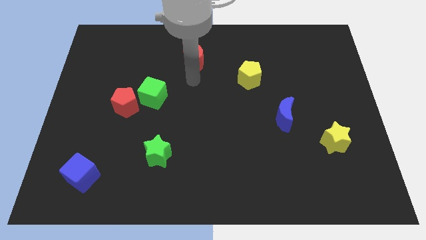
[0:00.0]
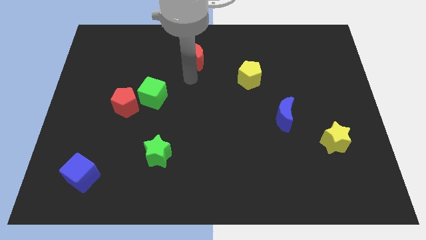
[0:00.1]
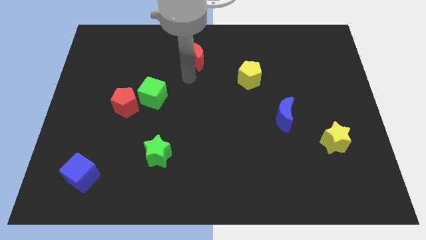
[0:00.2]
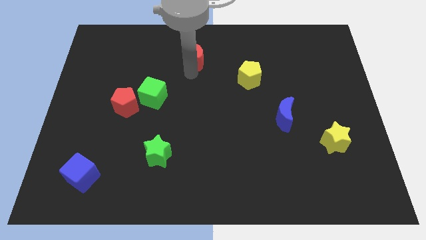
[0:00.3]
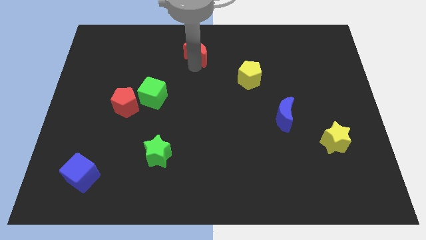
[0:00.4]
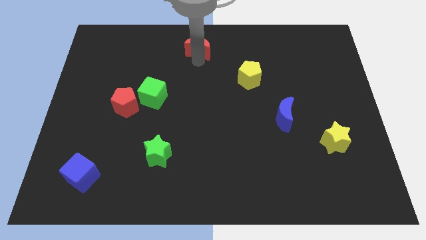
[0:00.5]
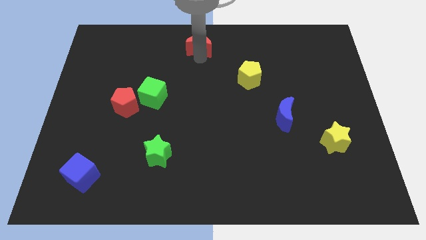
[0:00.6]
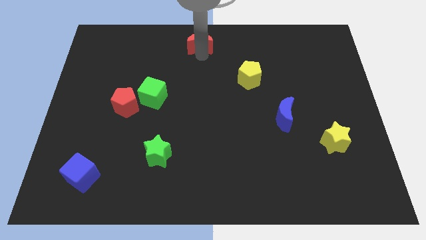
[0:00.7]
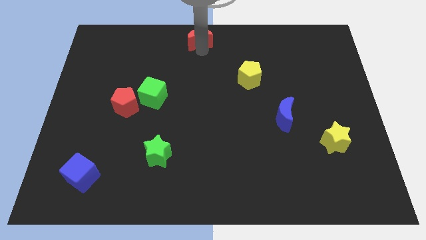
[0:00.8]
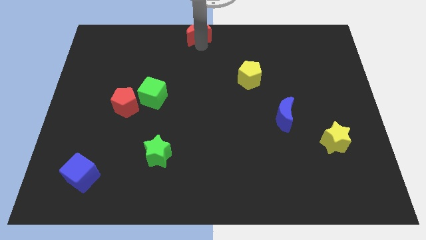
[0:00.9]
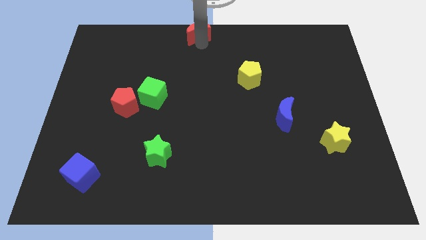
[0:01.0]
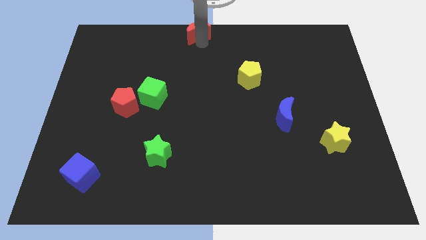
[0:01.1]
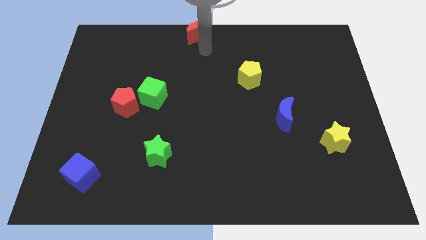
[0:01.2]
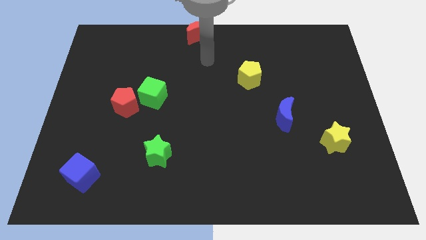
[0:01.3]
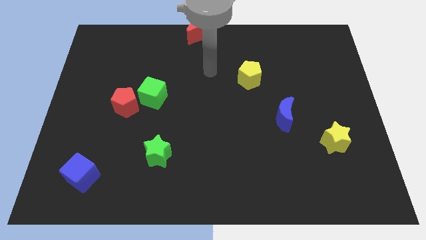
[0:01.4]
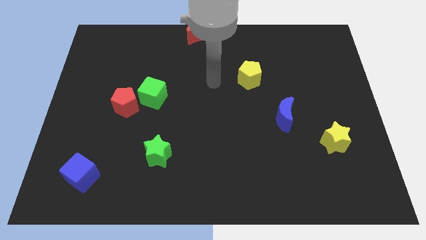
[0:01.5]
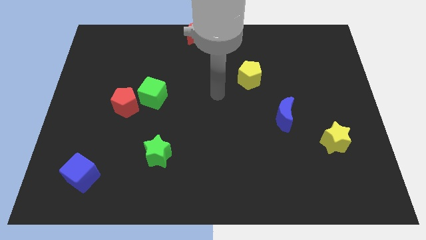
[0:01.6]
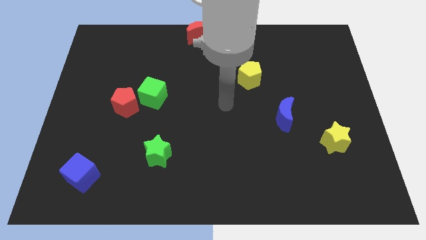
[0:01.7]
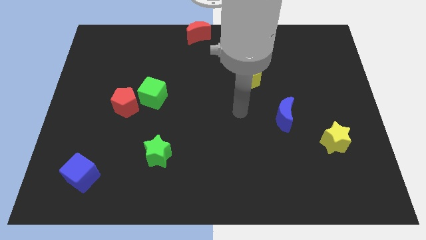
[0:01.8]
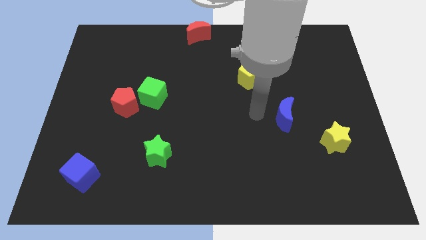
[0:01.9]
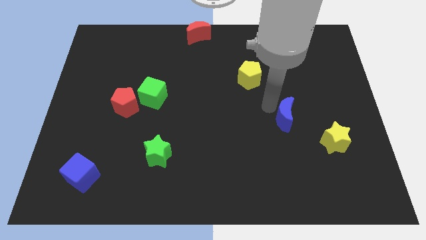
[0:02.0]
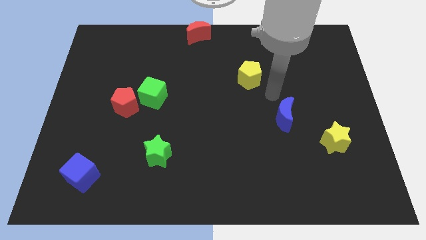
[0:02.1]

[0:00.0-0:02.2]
place red crescent on top center of the board

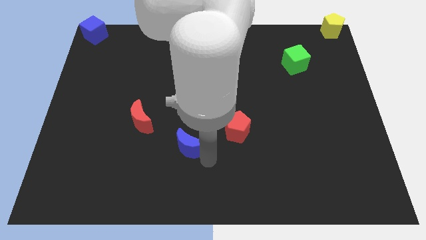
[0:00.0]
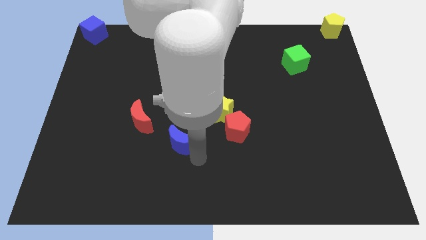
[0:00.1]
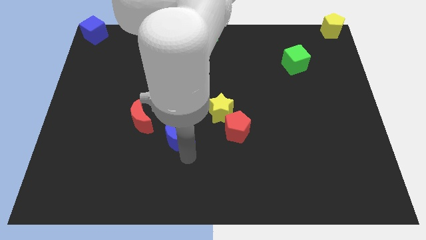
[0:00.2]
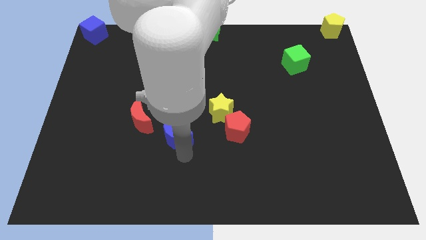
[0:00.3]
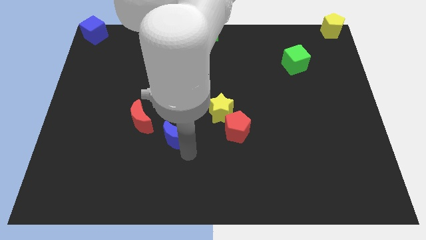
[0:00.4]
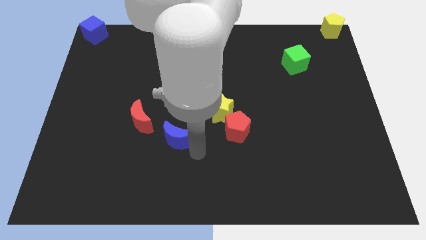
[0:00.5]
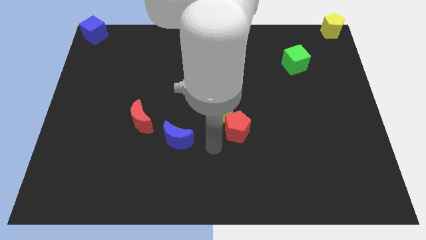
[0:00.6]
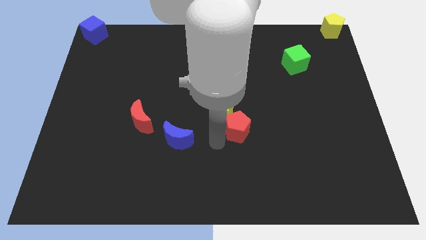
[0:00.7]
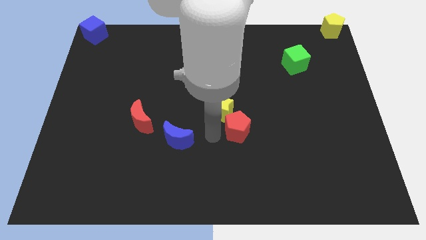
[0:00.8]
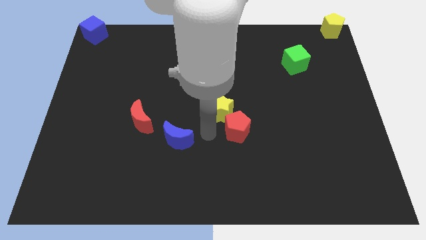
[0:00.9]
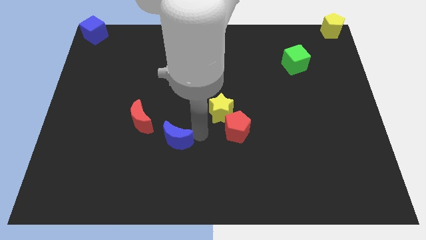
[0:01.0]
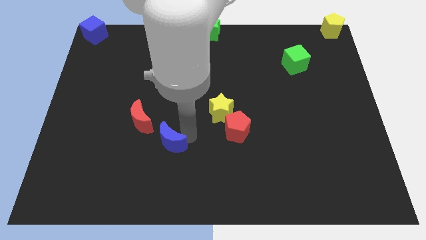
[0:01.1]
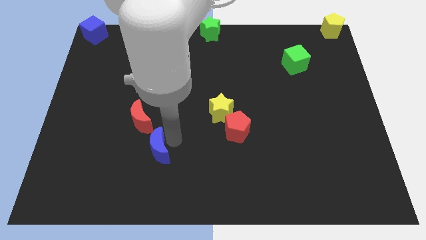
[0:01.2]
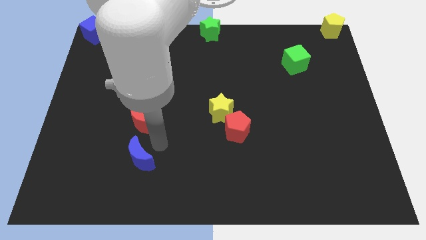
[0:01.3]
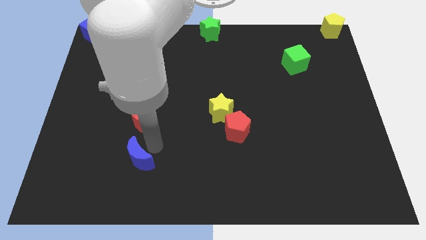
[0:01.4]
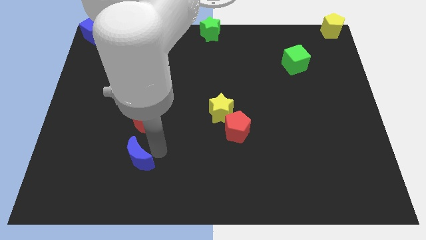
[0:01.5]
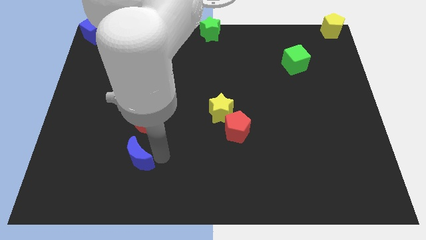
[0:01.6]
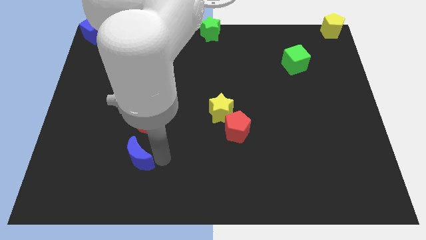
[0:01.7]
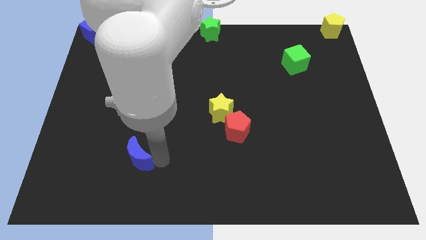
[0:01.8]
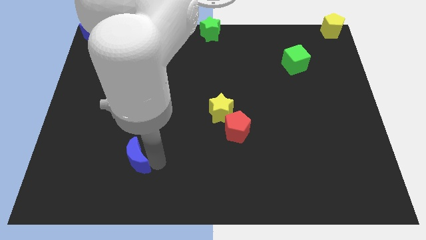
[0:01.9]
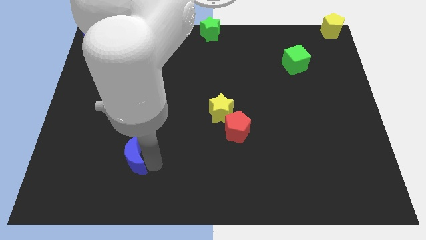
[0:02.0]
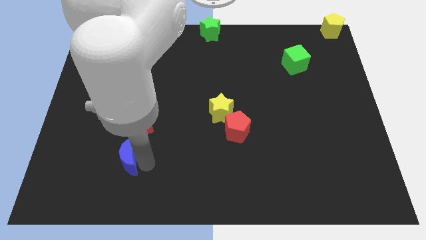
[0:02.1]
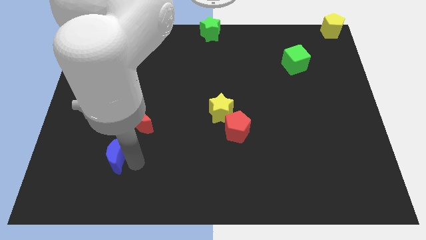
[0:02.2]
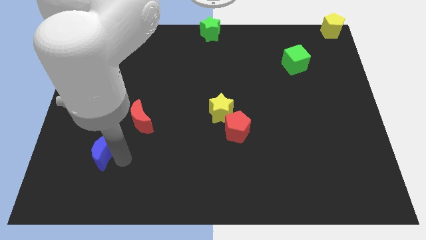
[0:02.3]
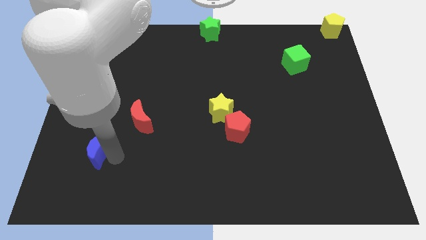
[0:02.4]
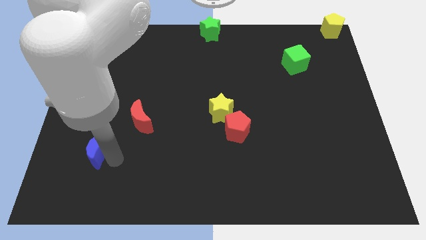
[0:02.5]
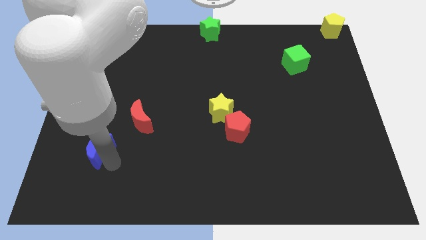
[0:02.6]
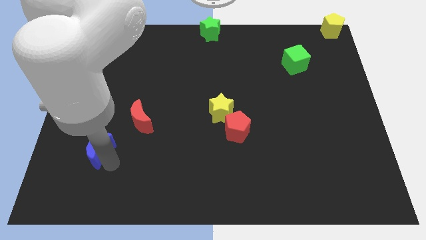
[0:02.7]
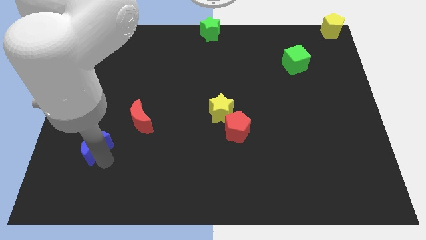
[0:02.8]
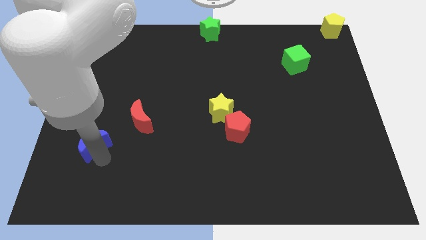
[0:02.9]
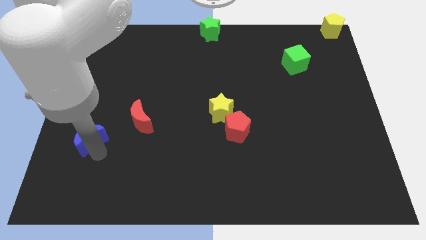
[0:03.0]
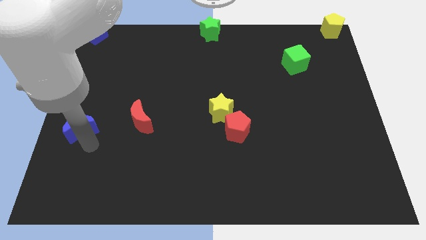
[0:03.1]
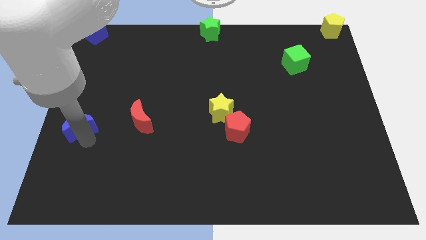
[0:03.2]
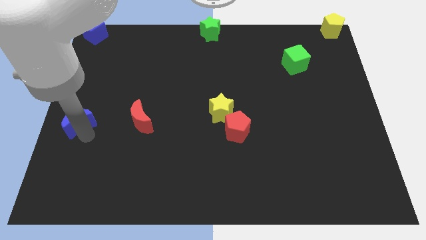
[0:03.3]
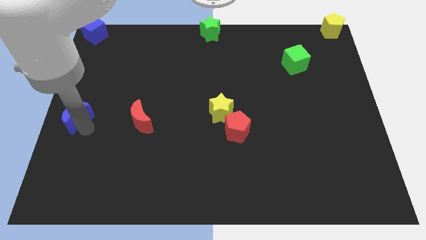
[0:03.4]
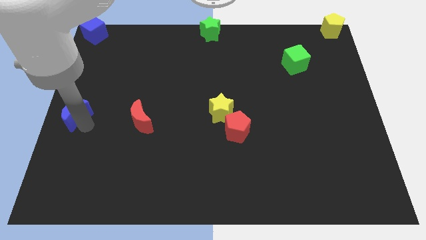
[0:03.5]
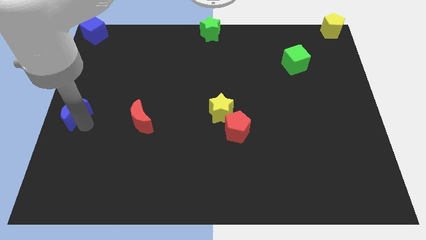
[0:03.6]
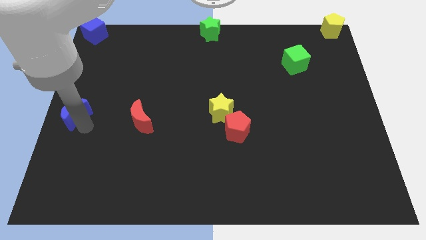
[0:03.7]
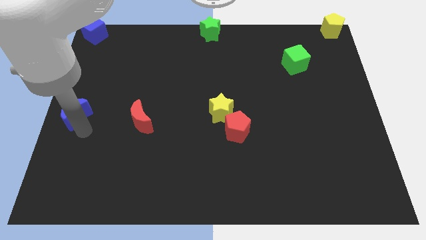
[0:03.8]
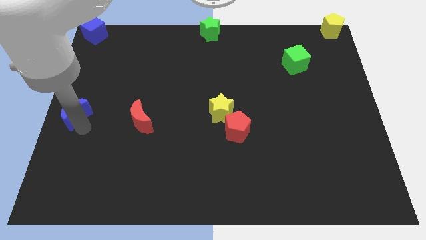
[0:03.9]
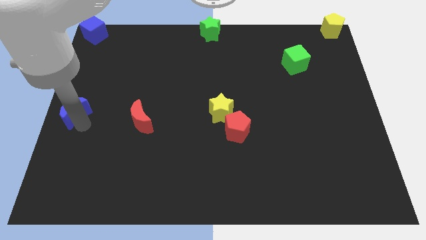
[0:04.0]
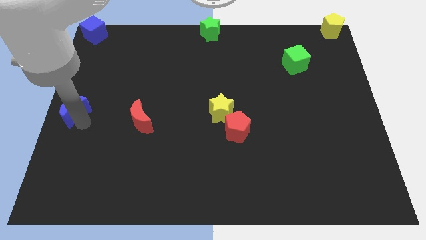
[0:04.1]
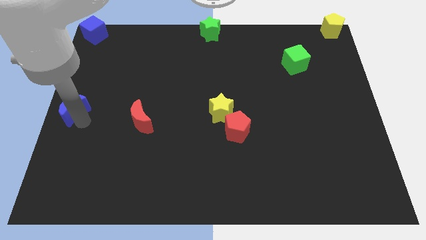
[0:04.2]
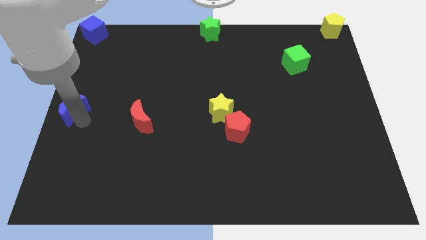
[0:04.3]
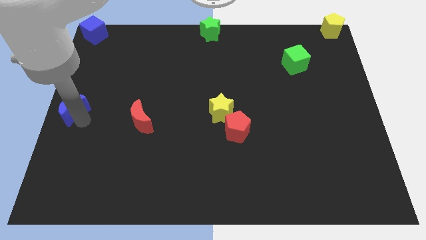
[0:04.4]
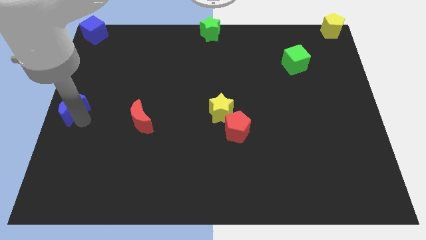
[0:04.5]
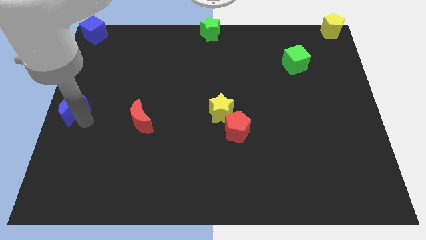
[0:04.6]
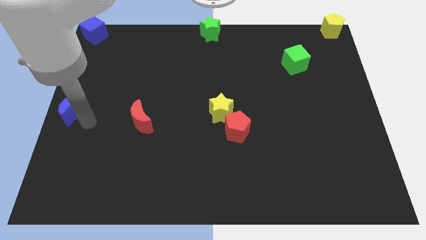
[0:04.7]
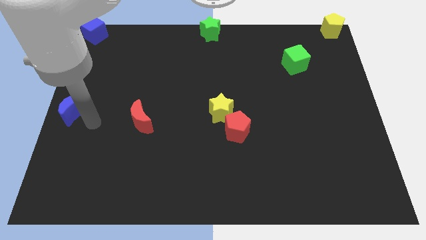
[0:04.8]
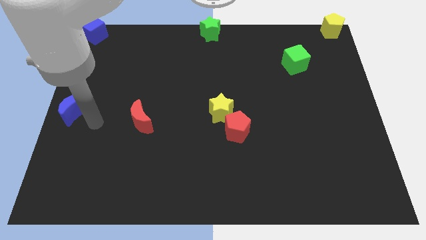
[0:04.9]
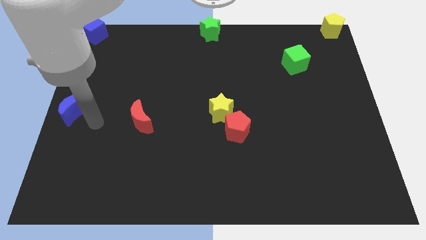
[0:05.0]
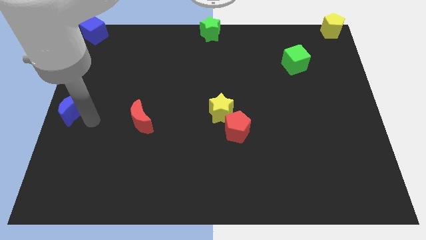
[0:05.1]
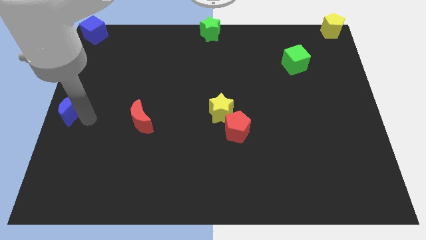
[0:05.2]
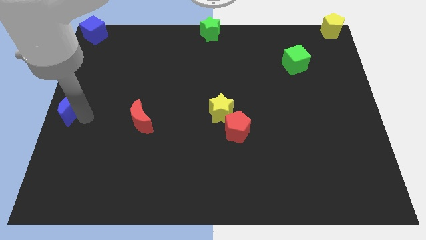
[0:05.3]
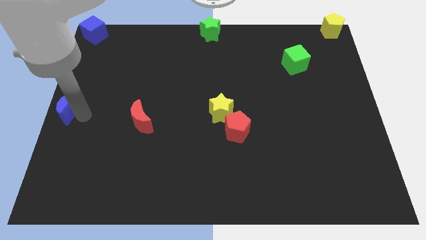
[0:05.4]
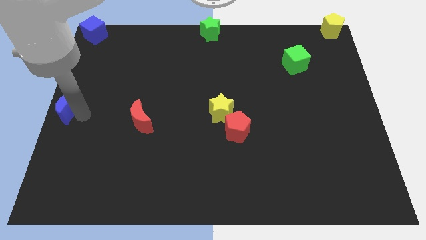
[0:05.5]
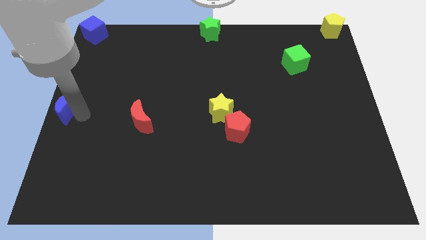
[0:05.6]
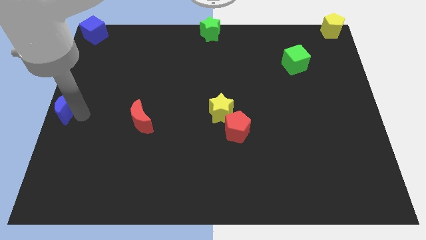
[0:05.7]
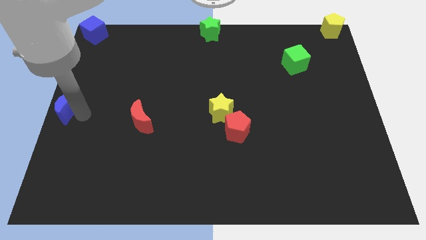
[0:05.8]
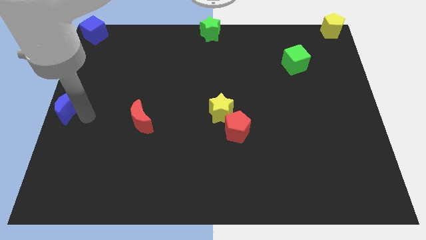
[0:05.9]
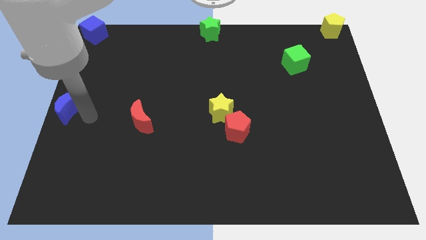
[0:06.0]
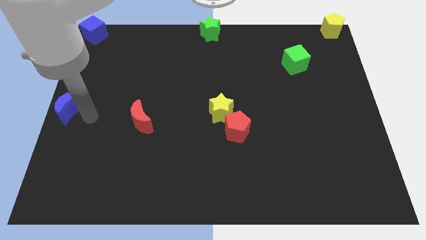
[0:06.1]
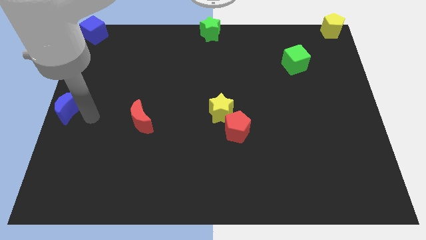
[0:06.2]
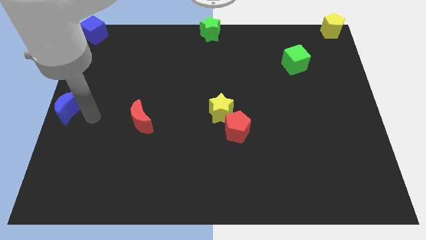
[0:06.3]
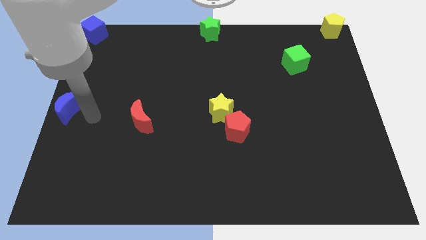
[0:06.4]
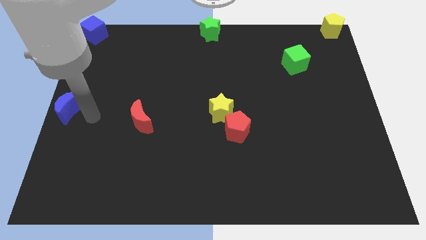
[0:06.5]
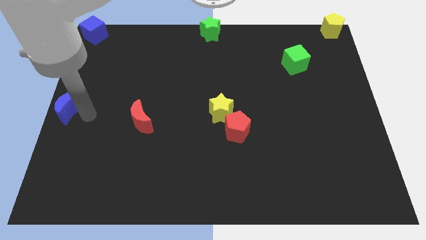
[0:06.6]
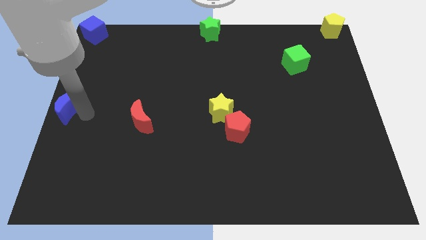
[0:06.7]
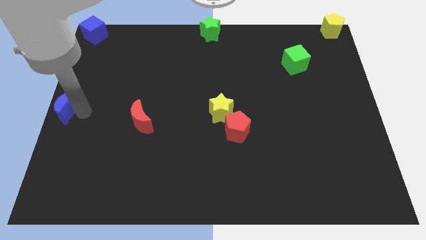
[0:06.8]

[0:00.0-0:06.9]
drag blue moon towards middle left side of the board
